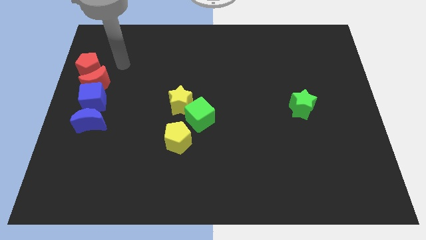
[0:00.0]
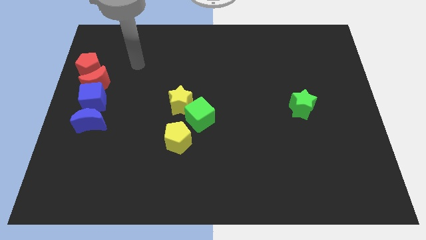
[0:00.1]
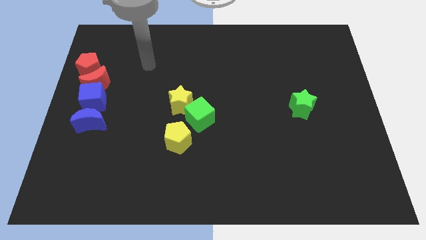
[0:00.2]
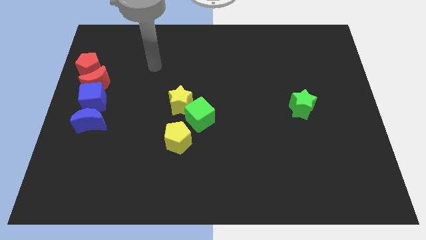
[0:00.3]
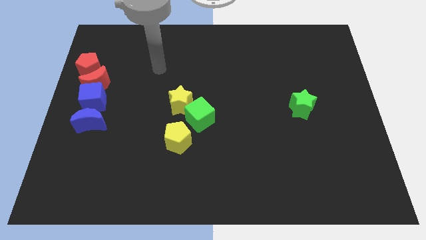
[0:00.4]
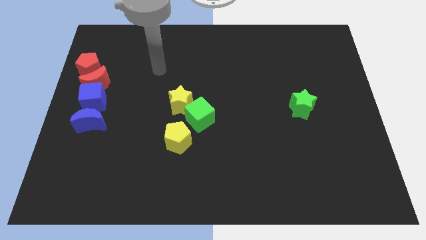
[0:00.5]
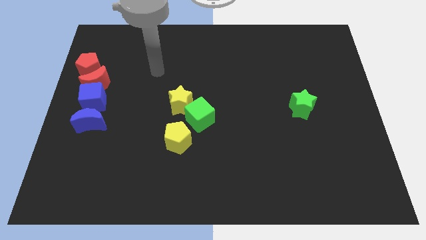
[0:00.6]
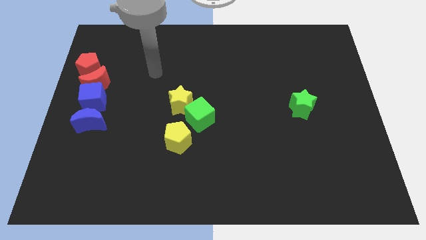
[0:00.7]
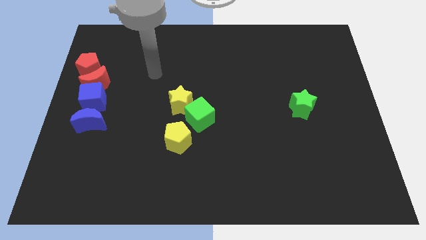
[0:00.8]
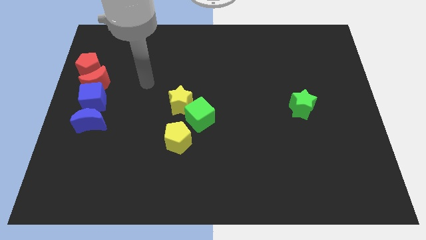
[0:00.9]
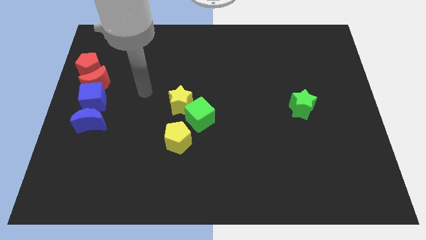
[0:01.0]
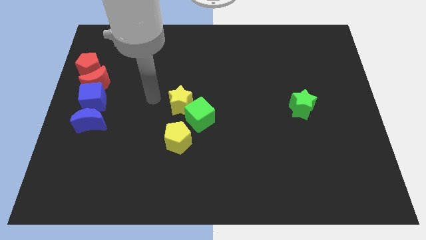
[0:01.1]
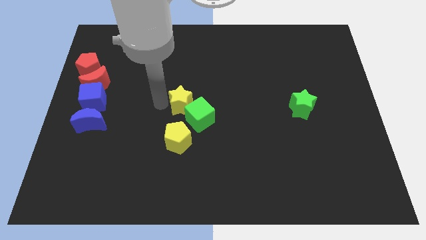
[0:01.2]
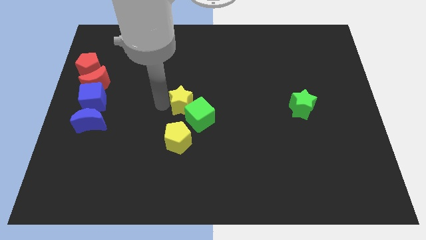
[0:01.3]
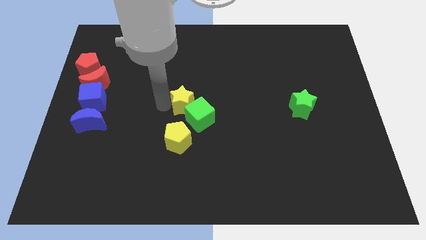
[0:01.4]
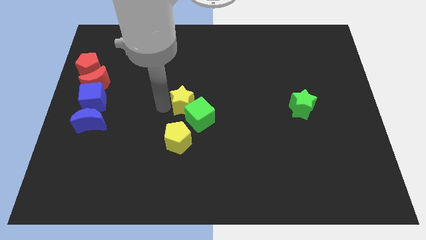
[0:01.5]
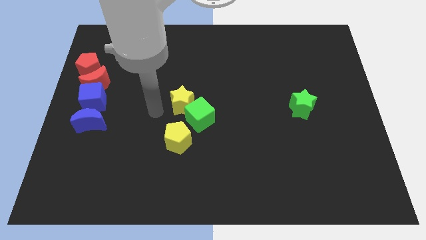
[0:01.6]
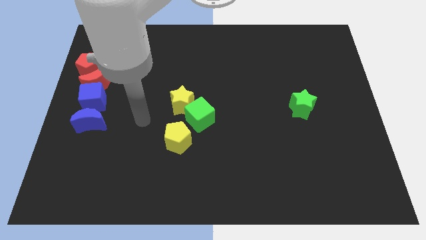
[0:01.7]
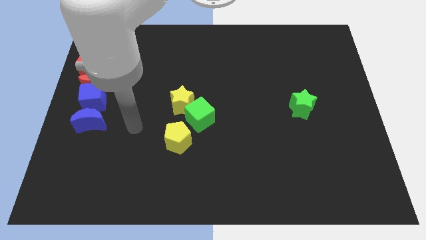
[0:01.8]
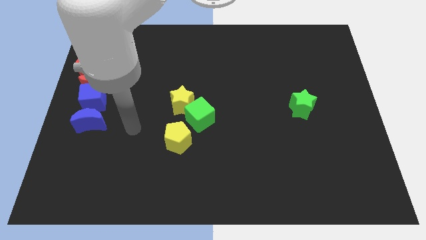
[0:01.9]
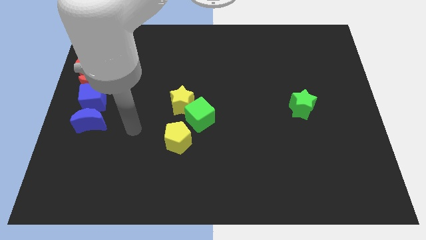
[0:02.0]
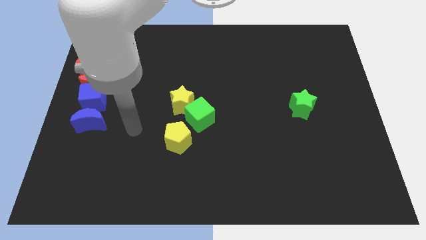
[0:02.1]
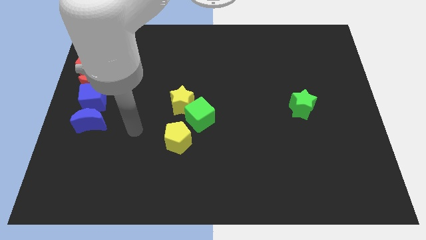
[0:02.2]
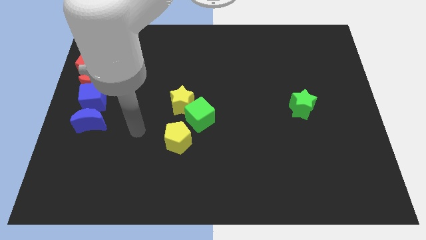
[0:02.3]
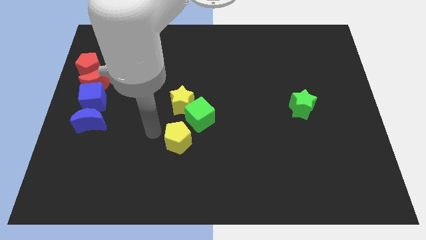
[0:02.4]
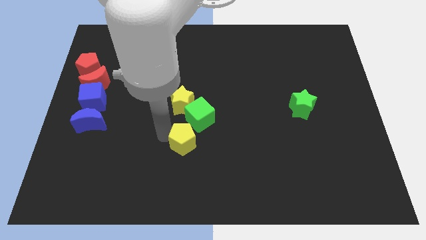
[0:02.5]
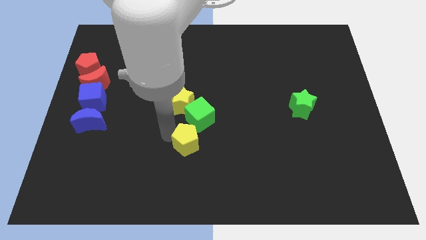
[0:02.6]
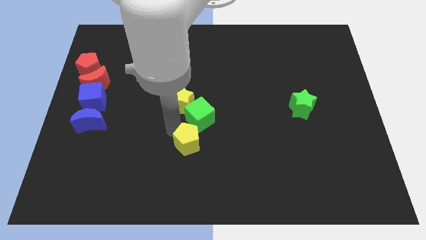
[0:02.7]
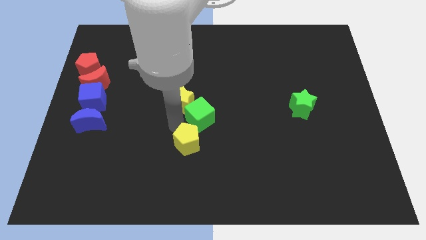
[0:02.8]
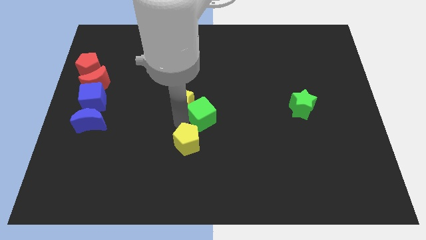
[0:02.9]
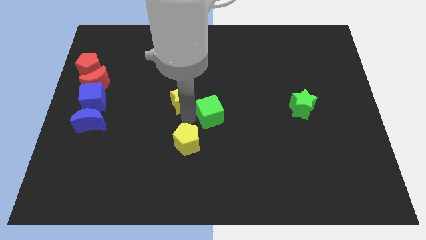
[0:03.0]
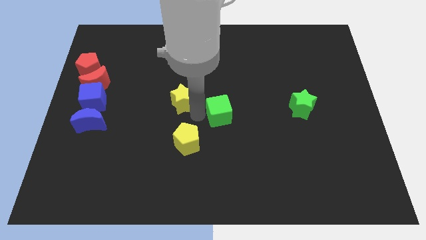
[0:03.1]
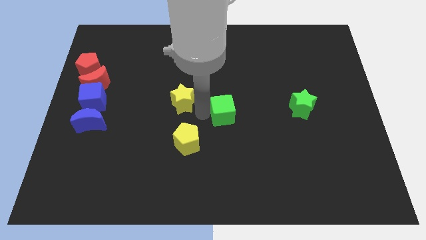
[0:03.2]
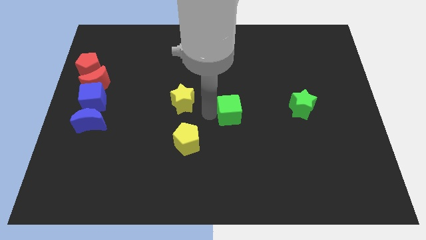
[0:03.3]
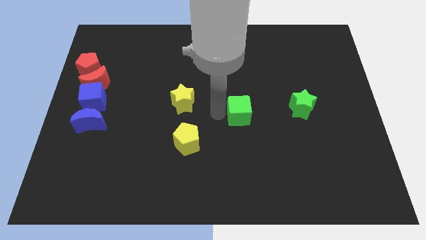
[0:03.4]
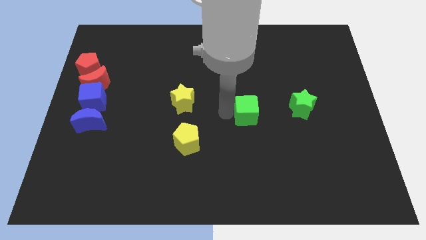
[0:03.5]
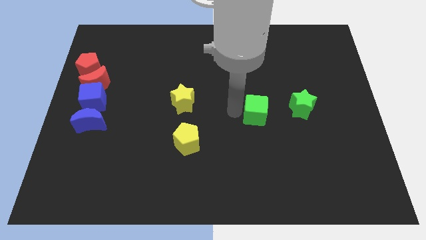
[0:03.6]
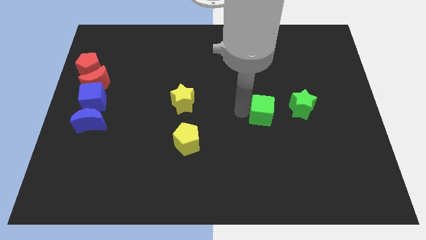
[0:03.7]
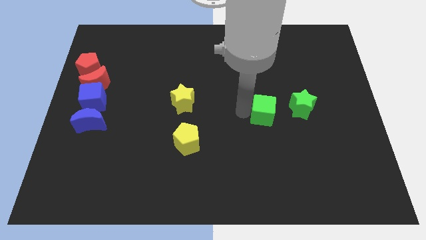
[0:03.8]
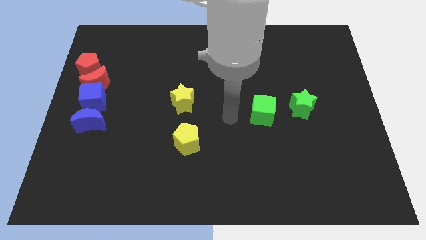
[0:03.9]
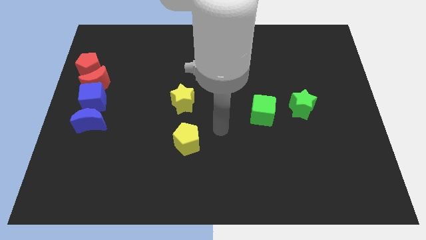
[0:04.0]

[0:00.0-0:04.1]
move the green cube towards the left side of the green star

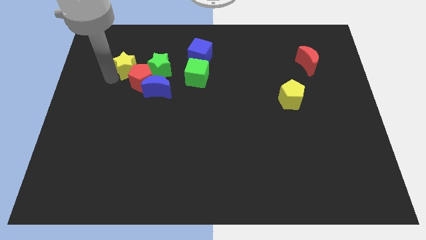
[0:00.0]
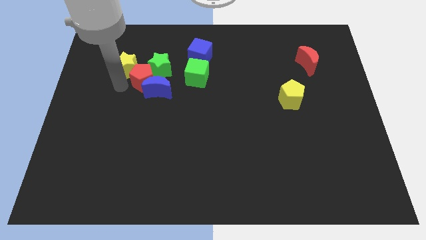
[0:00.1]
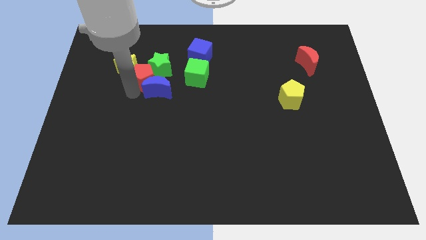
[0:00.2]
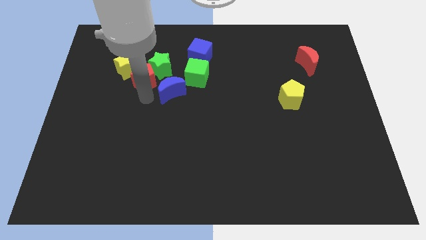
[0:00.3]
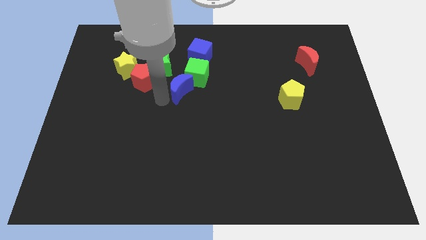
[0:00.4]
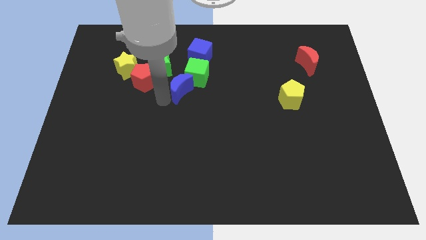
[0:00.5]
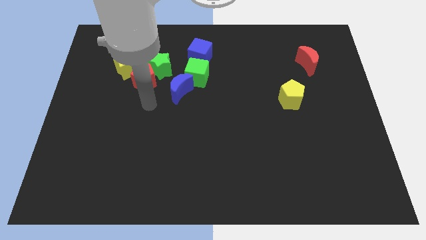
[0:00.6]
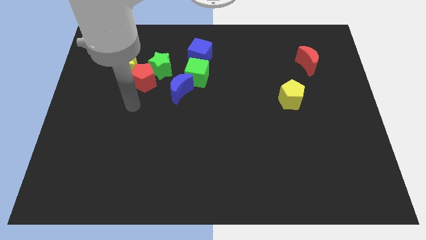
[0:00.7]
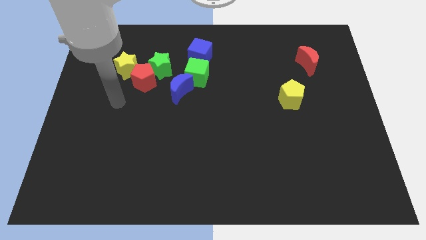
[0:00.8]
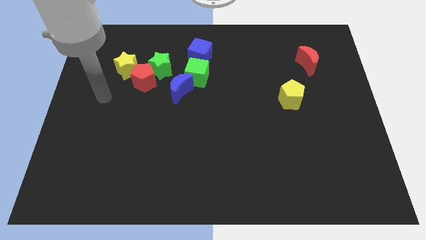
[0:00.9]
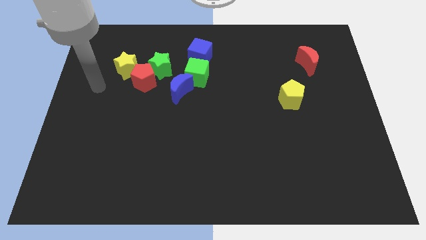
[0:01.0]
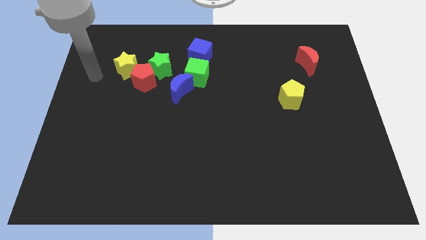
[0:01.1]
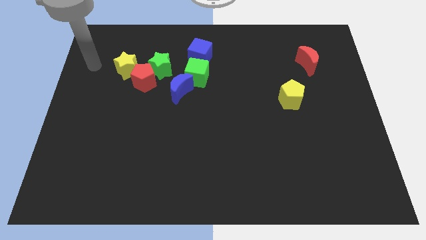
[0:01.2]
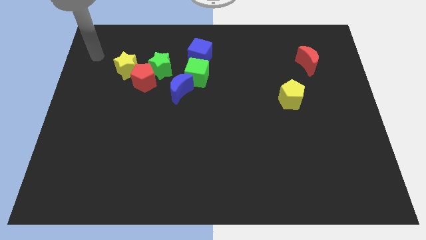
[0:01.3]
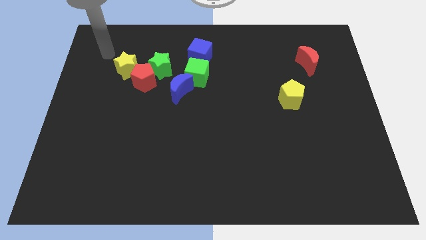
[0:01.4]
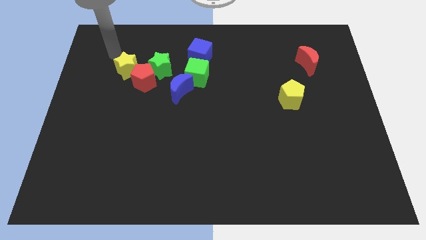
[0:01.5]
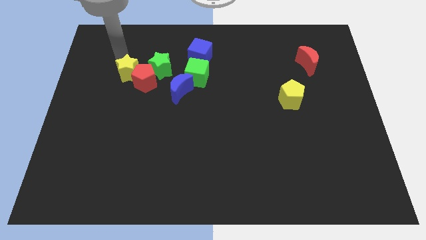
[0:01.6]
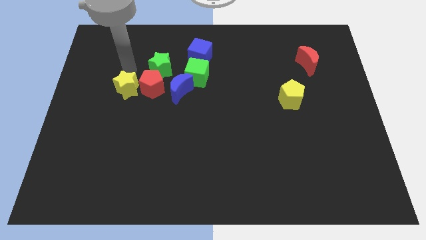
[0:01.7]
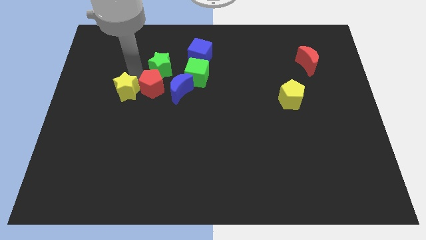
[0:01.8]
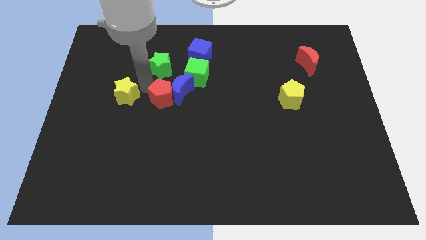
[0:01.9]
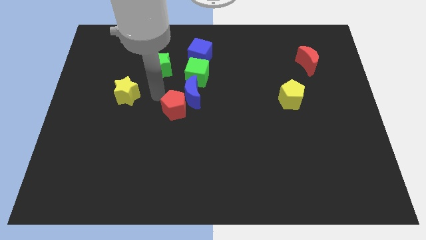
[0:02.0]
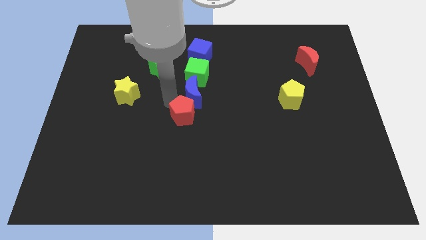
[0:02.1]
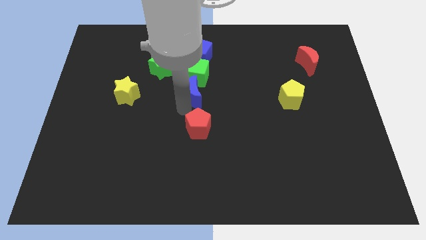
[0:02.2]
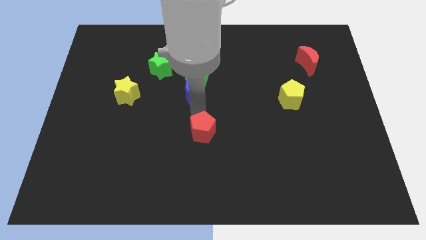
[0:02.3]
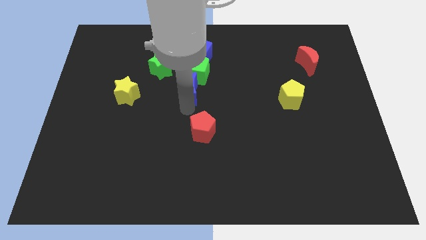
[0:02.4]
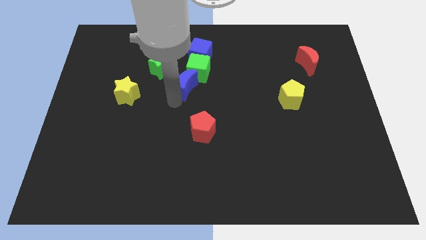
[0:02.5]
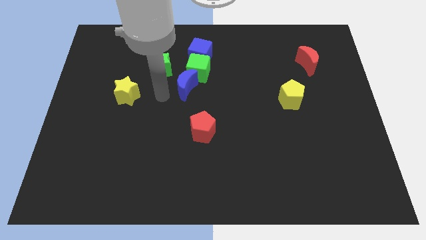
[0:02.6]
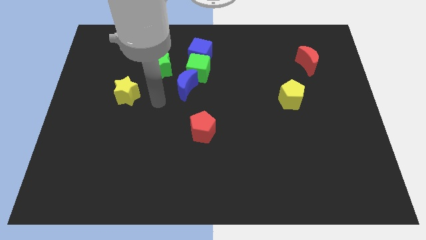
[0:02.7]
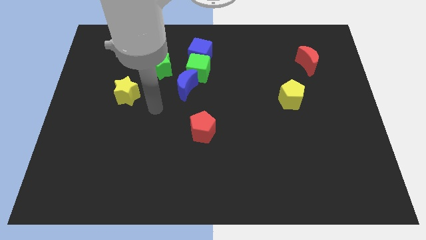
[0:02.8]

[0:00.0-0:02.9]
separate the red pentagon and yellow star

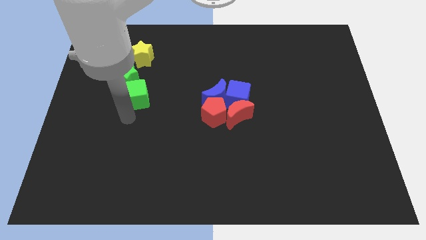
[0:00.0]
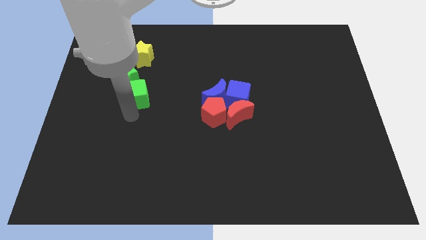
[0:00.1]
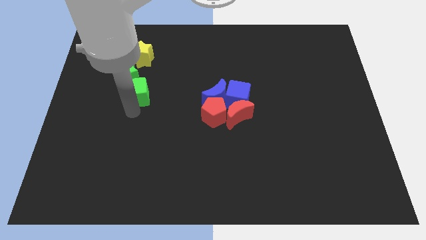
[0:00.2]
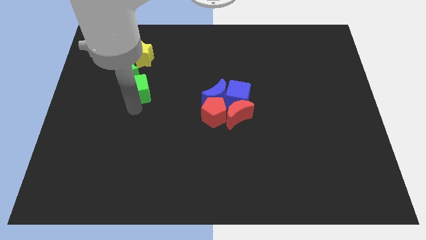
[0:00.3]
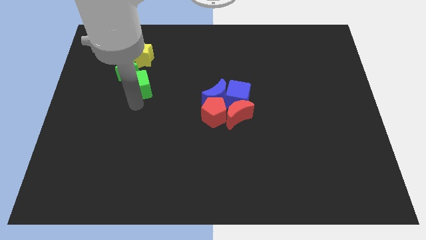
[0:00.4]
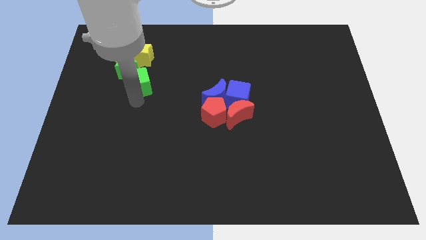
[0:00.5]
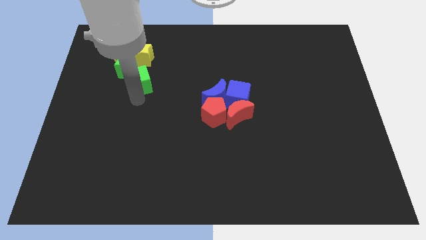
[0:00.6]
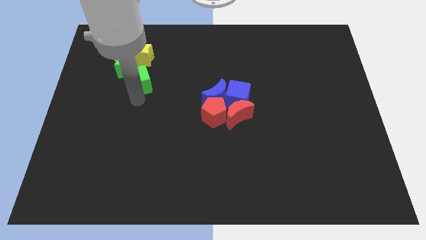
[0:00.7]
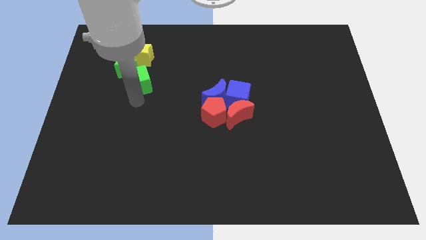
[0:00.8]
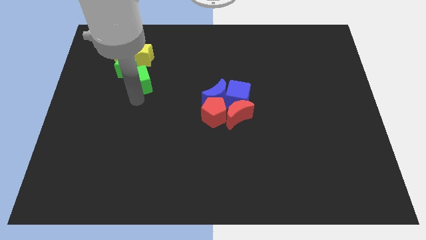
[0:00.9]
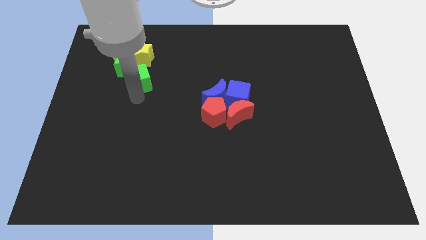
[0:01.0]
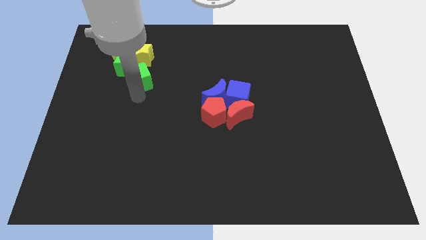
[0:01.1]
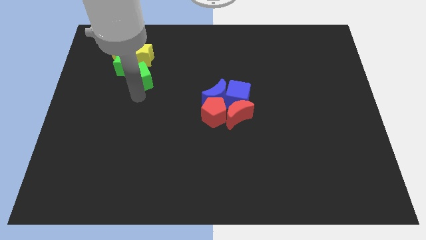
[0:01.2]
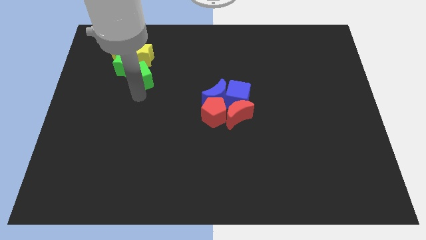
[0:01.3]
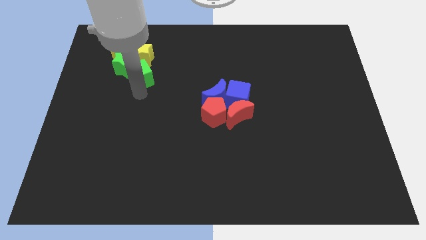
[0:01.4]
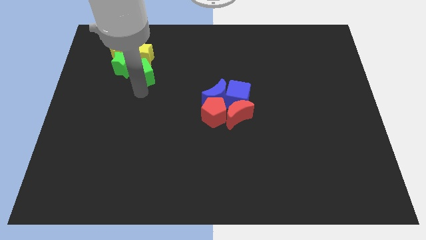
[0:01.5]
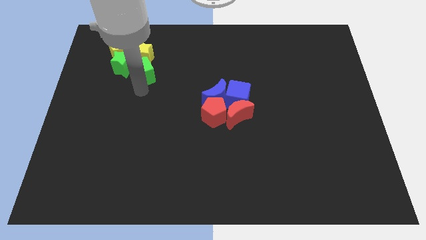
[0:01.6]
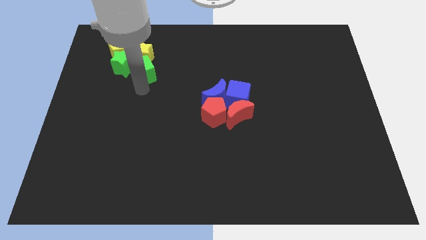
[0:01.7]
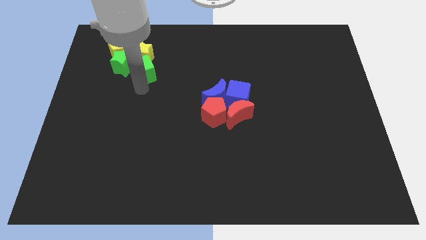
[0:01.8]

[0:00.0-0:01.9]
push the green cube into the yellow star
